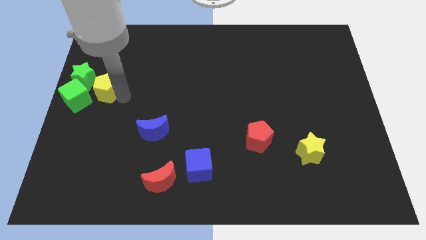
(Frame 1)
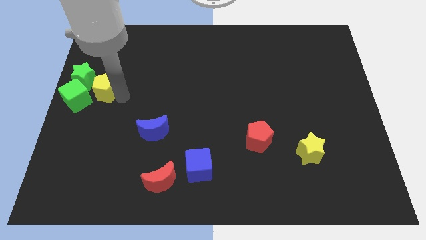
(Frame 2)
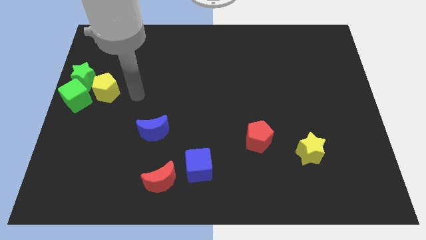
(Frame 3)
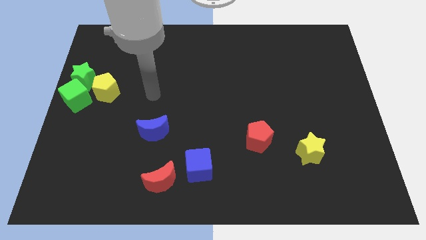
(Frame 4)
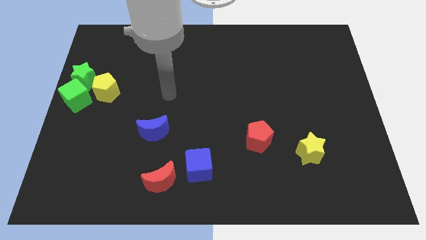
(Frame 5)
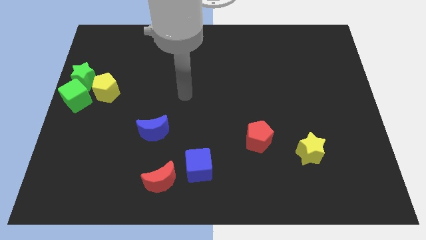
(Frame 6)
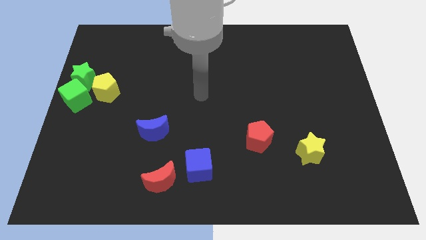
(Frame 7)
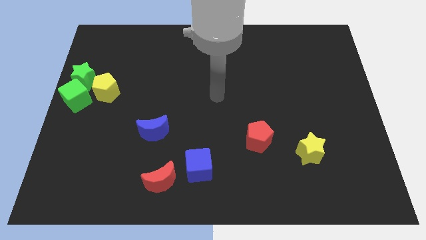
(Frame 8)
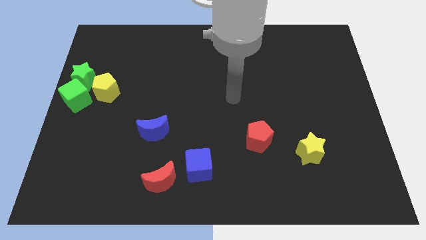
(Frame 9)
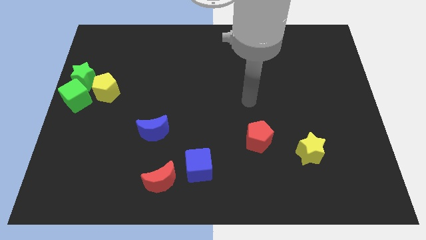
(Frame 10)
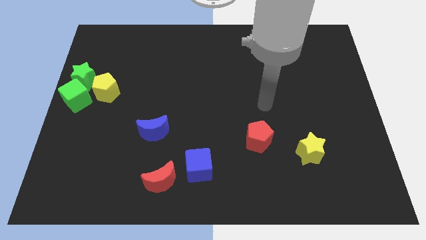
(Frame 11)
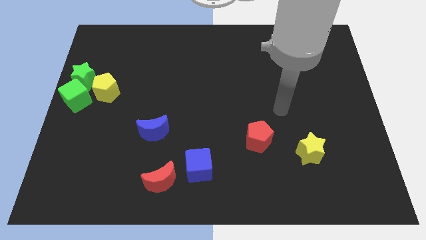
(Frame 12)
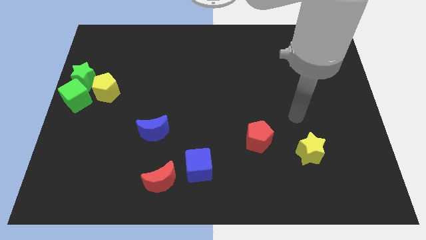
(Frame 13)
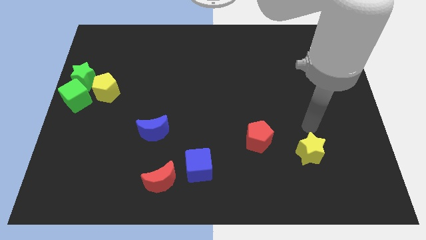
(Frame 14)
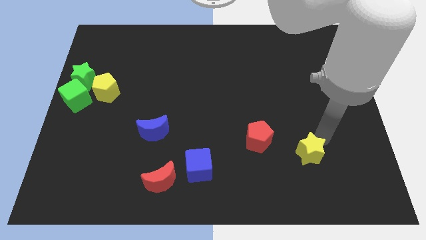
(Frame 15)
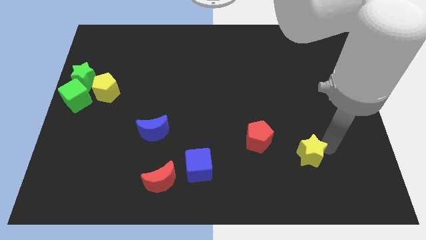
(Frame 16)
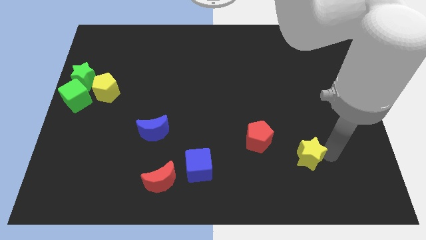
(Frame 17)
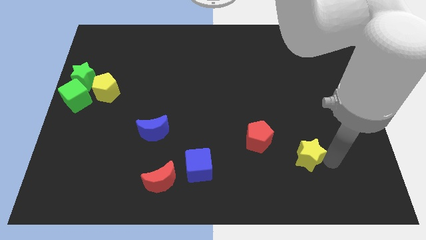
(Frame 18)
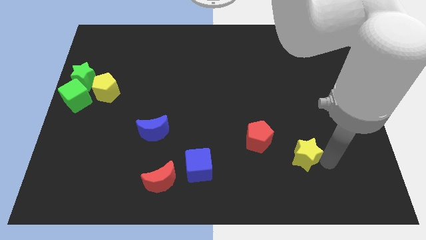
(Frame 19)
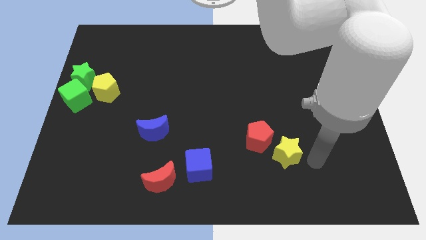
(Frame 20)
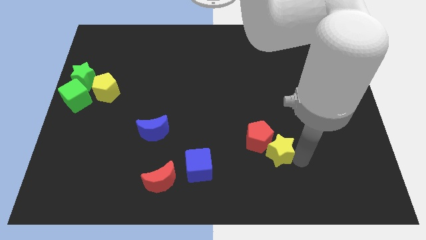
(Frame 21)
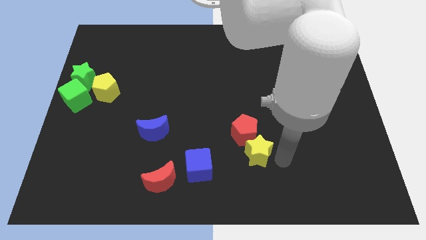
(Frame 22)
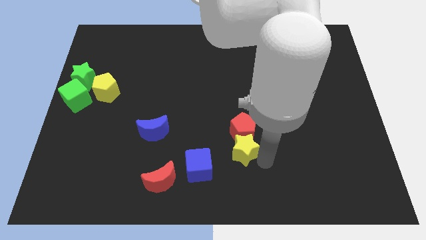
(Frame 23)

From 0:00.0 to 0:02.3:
move yellow star into the red pentagon

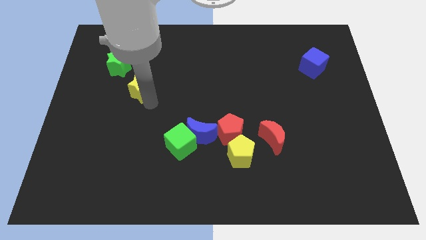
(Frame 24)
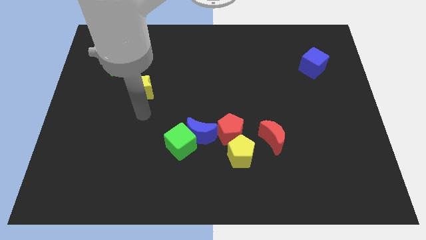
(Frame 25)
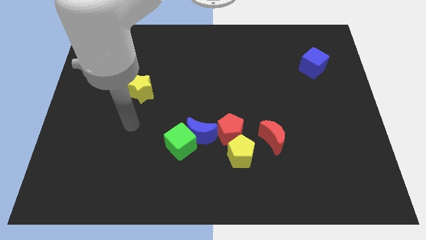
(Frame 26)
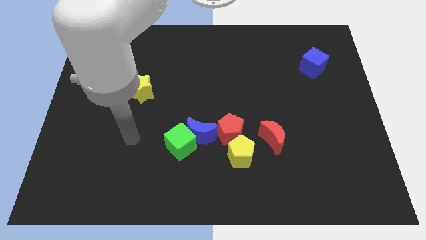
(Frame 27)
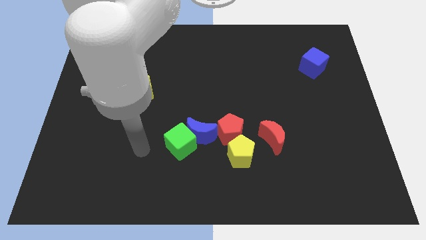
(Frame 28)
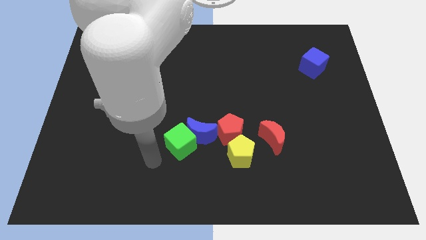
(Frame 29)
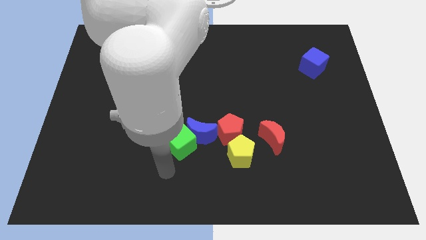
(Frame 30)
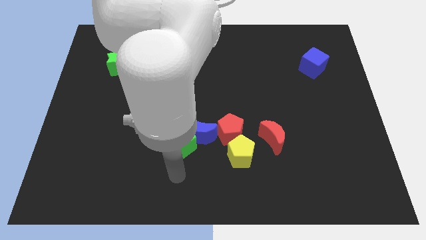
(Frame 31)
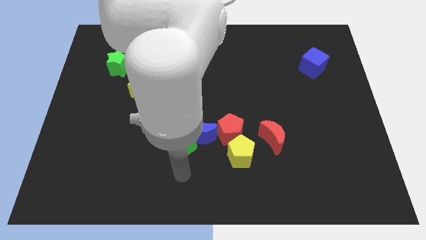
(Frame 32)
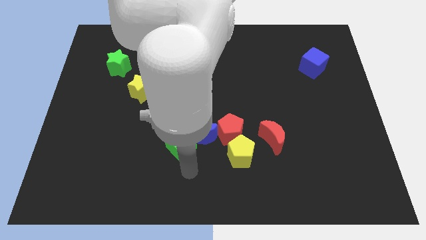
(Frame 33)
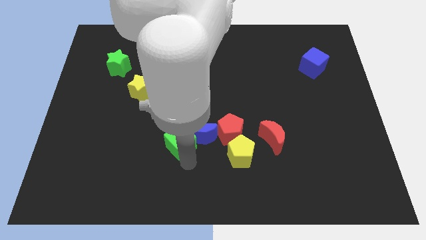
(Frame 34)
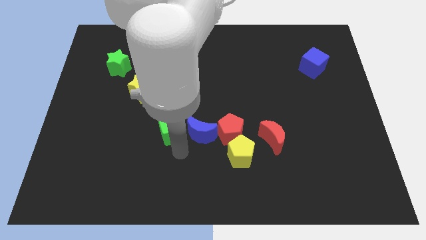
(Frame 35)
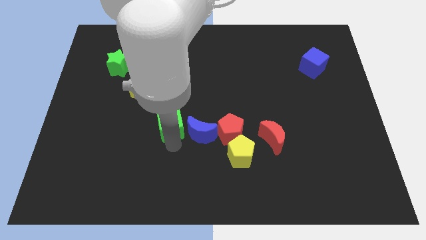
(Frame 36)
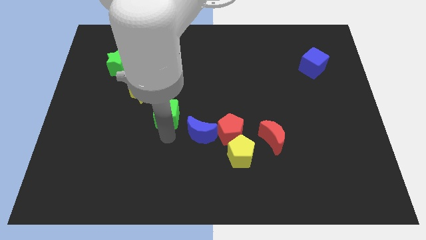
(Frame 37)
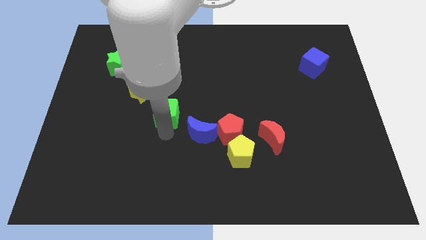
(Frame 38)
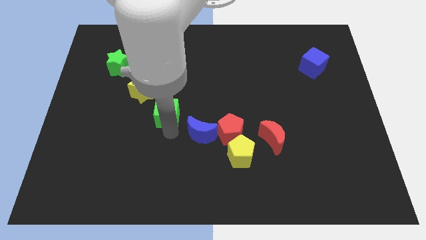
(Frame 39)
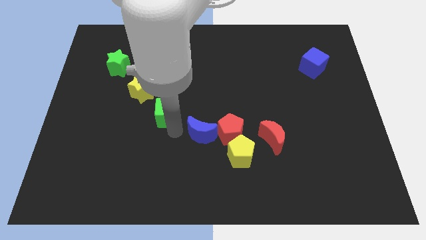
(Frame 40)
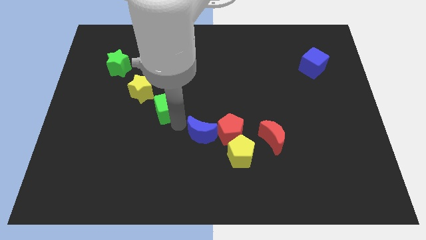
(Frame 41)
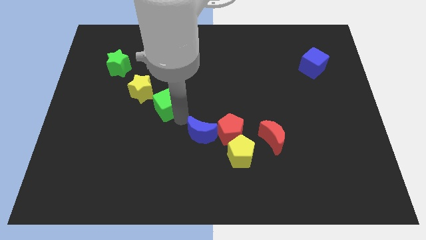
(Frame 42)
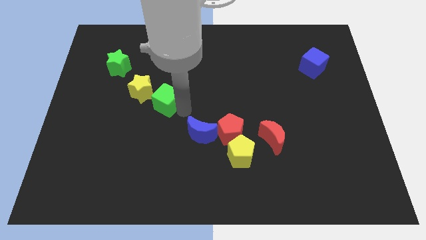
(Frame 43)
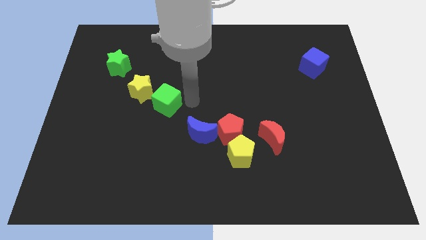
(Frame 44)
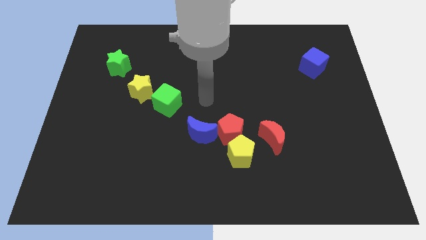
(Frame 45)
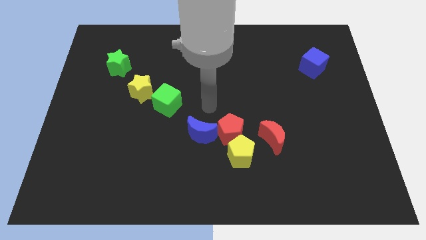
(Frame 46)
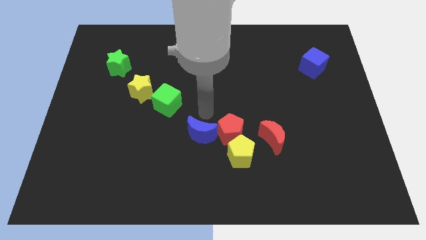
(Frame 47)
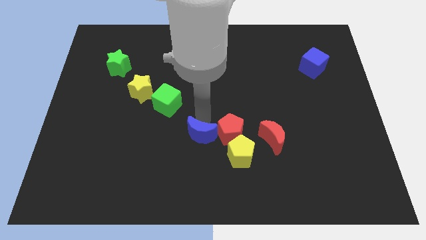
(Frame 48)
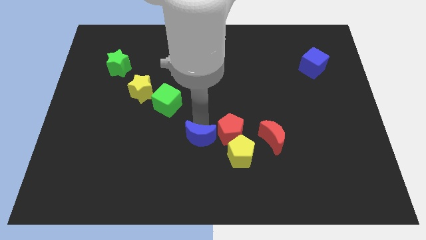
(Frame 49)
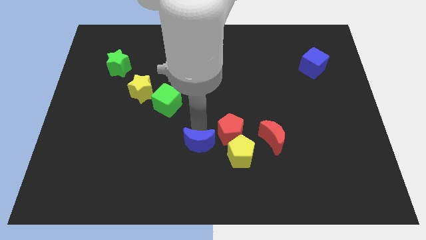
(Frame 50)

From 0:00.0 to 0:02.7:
separate the green cube and blue moon

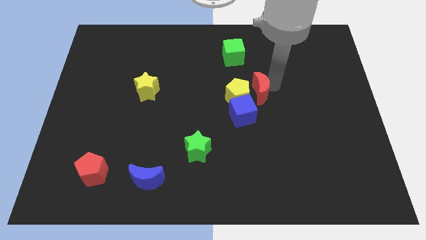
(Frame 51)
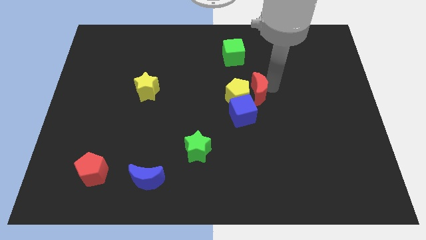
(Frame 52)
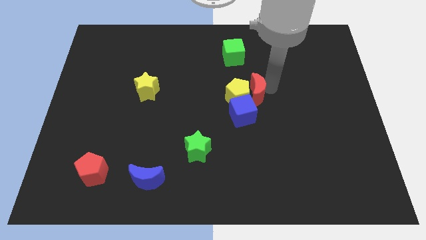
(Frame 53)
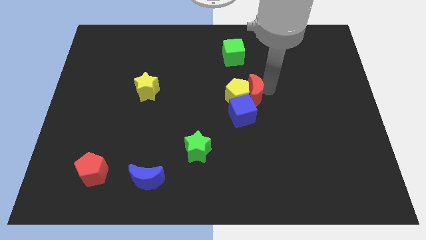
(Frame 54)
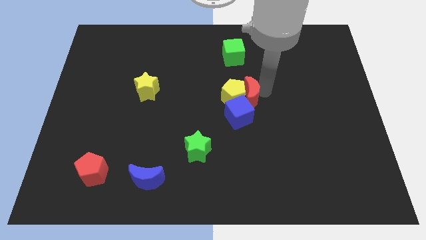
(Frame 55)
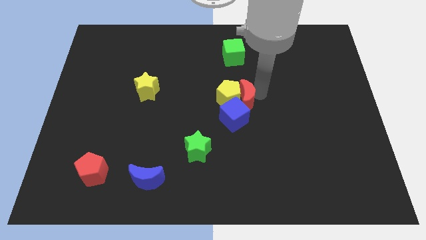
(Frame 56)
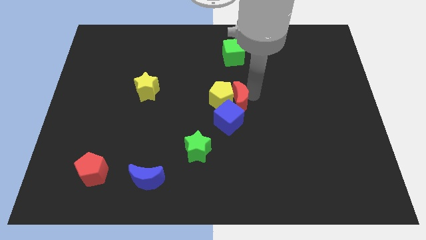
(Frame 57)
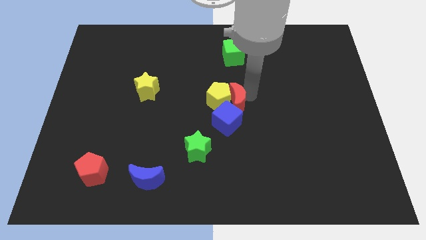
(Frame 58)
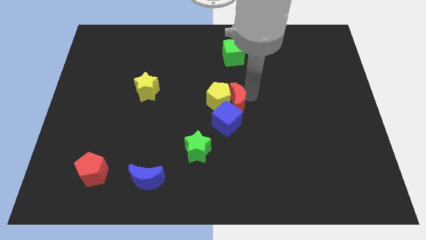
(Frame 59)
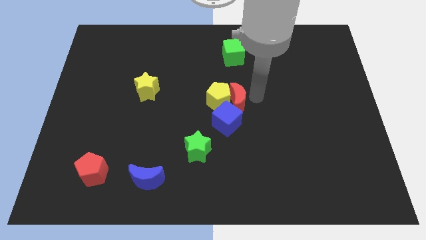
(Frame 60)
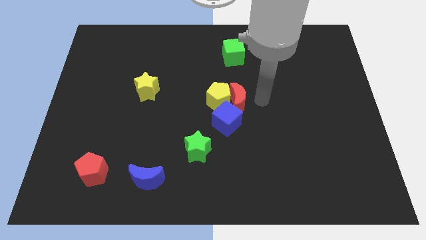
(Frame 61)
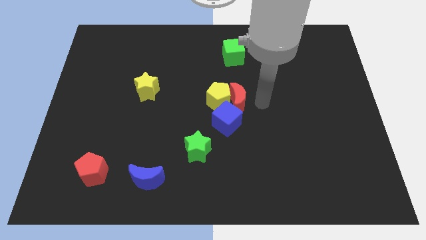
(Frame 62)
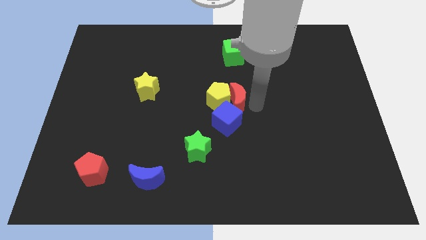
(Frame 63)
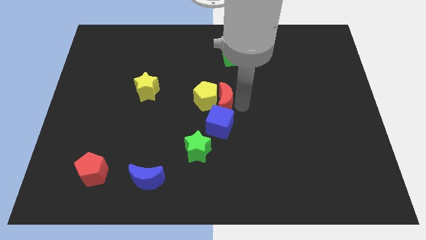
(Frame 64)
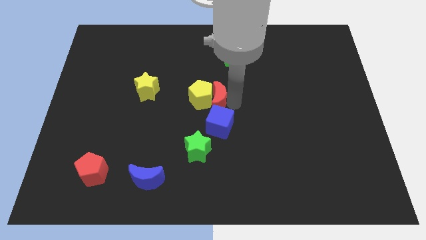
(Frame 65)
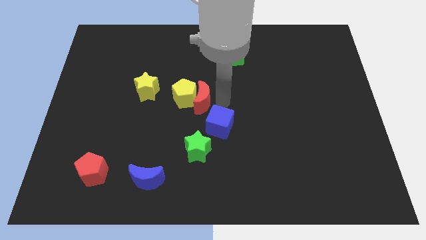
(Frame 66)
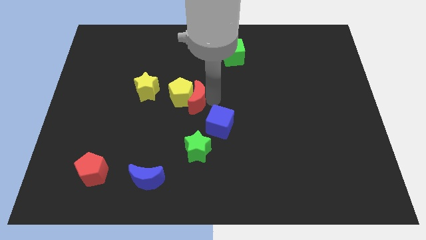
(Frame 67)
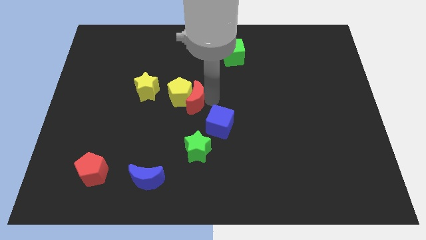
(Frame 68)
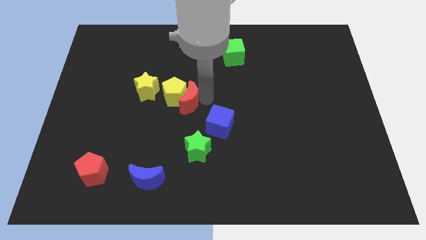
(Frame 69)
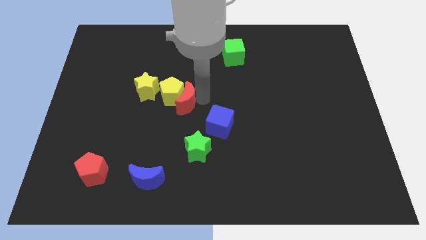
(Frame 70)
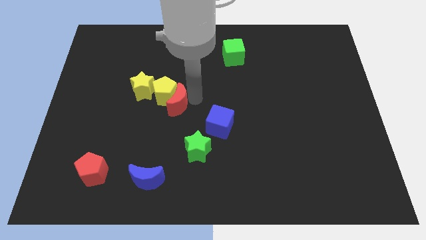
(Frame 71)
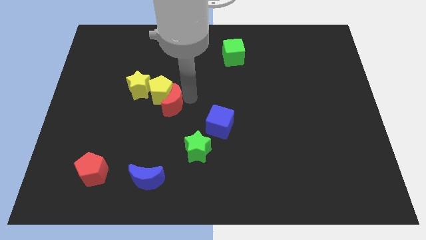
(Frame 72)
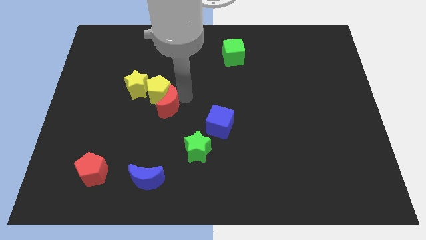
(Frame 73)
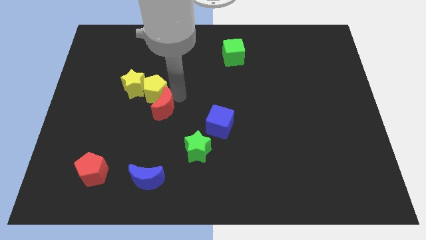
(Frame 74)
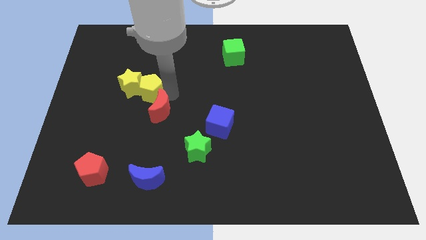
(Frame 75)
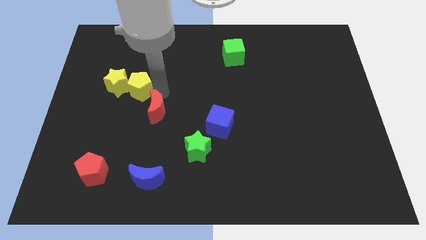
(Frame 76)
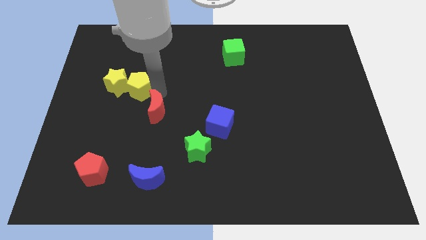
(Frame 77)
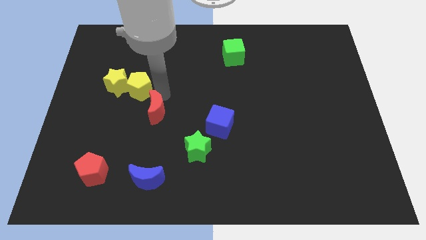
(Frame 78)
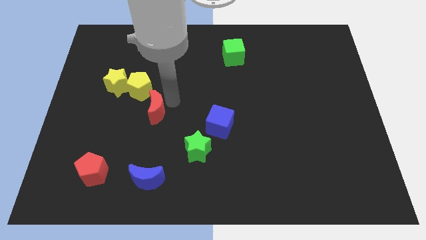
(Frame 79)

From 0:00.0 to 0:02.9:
push the yellow star yellow pentagon red crescent towards center left

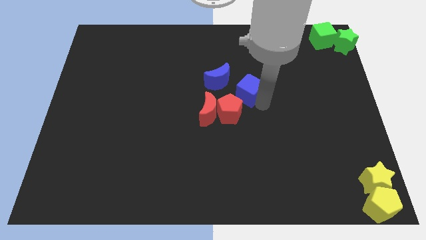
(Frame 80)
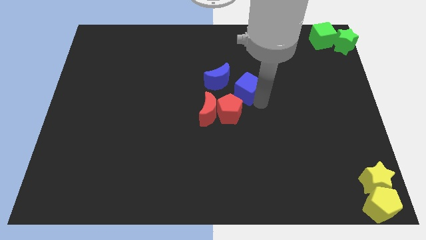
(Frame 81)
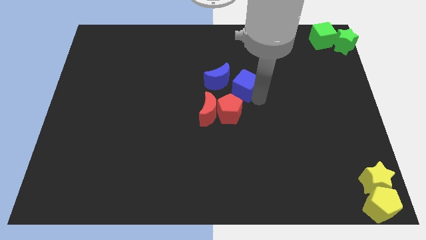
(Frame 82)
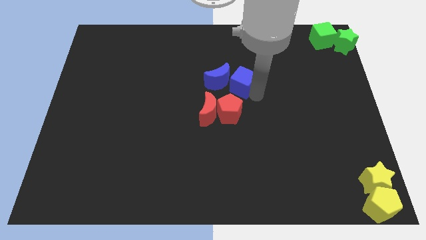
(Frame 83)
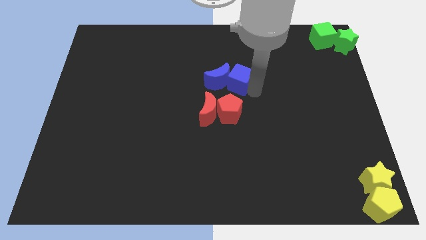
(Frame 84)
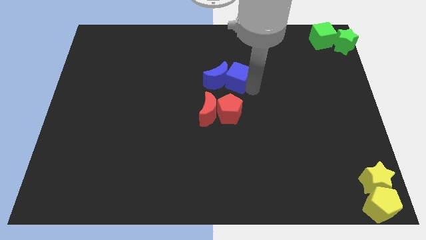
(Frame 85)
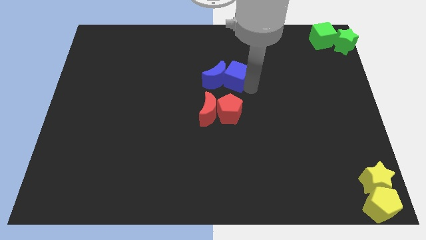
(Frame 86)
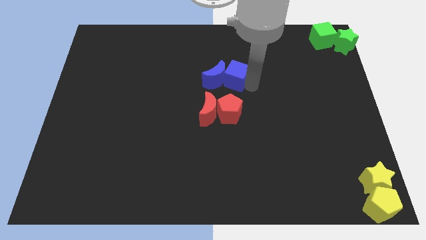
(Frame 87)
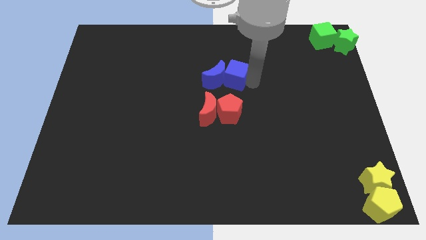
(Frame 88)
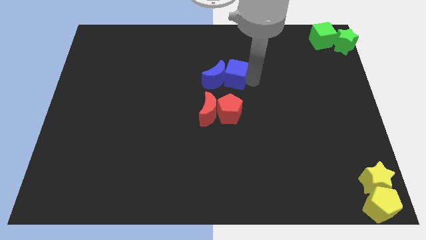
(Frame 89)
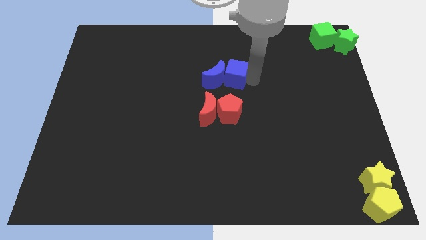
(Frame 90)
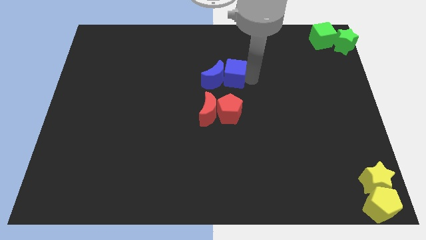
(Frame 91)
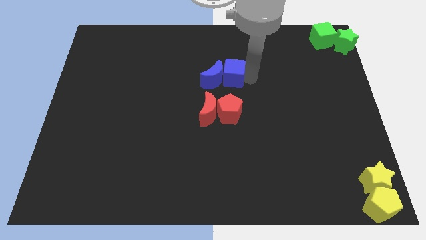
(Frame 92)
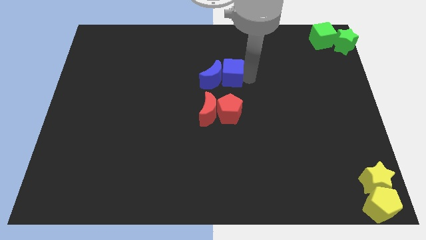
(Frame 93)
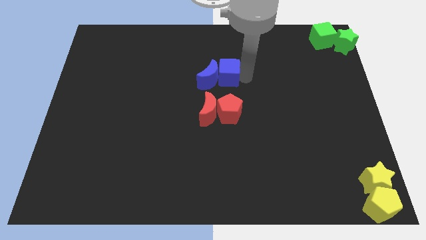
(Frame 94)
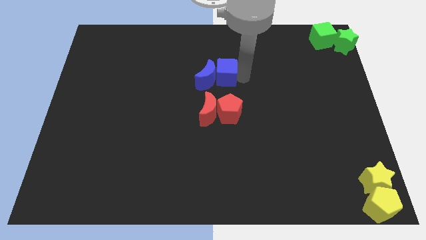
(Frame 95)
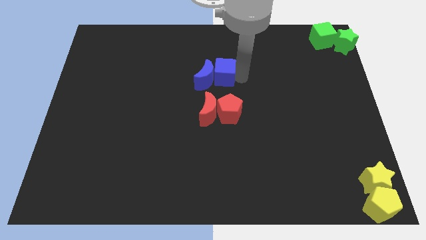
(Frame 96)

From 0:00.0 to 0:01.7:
move the blue cube into the blue moon
